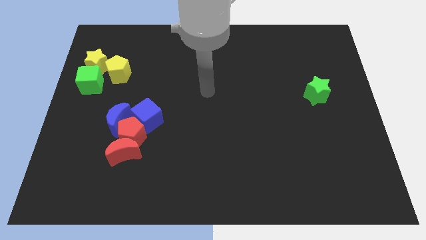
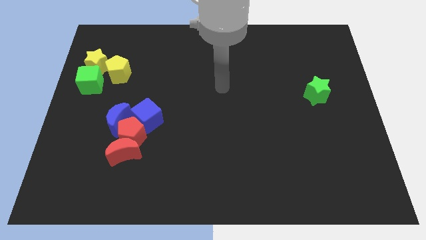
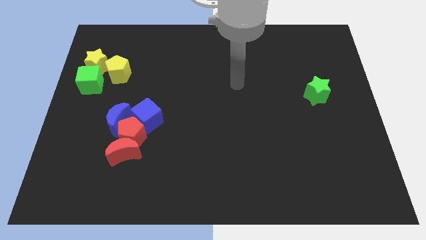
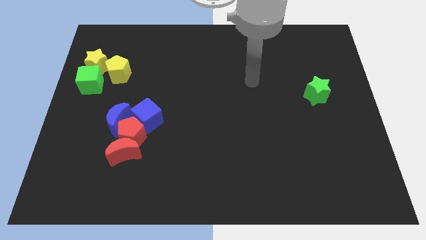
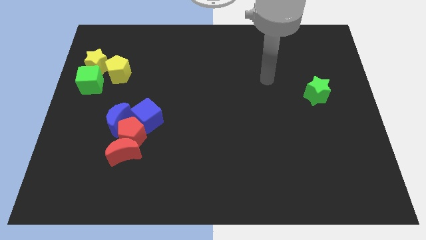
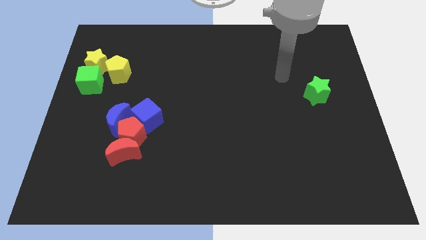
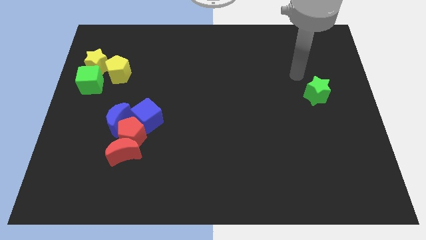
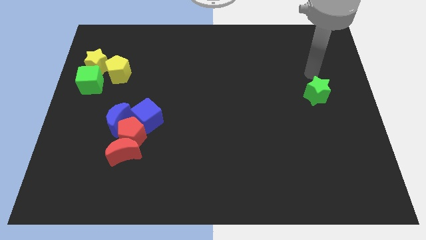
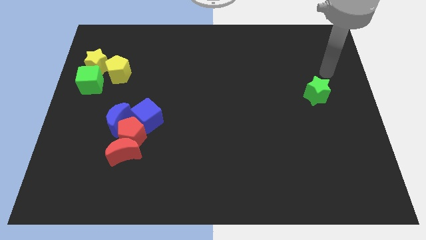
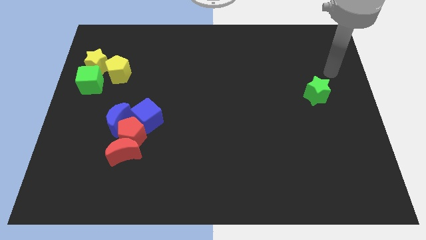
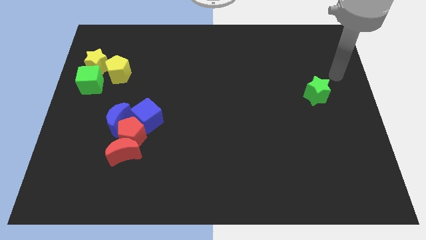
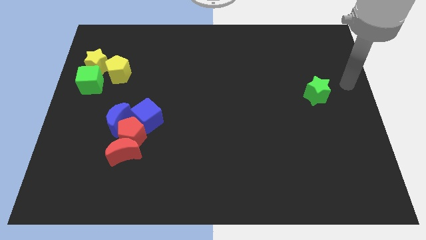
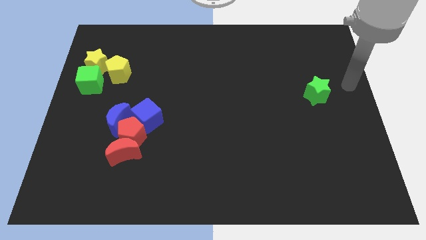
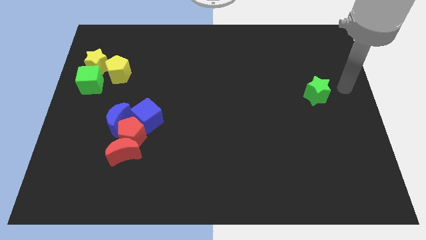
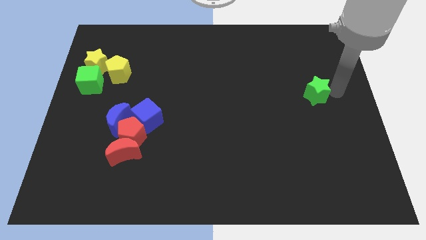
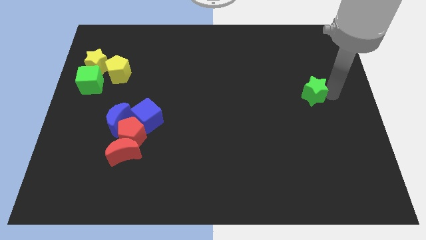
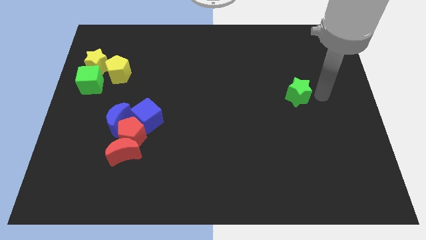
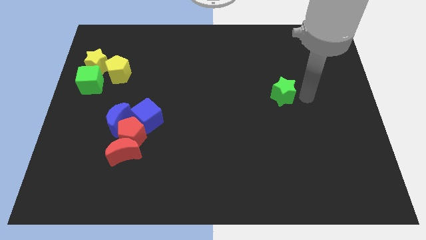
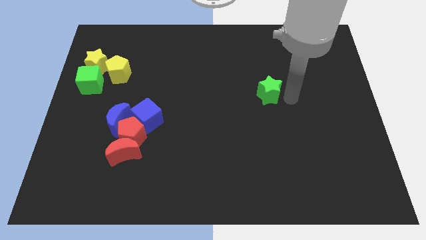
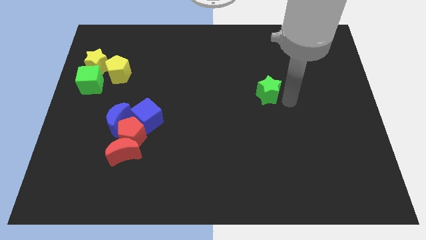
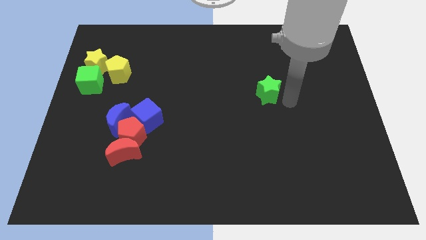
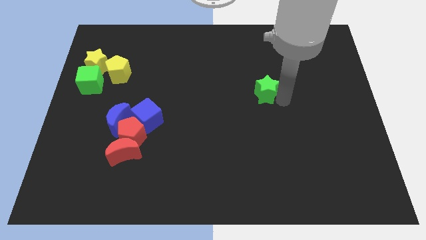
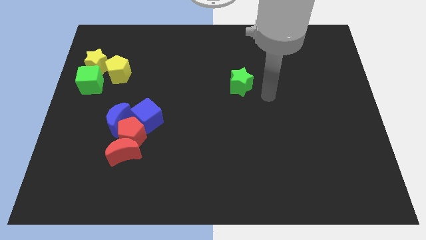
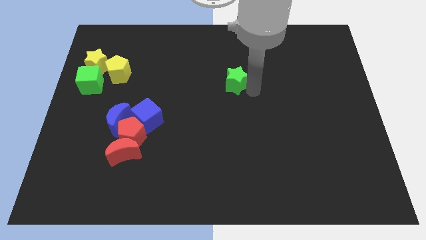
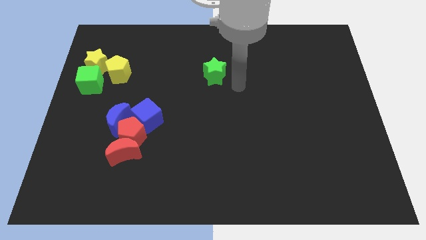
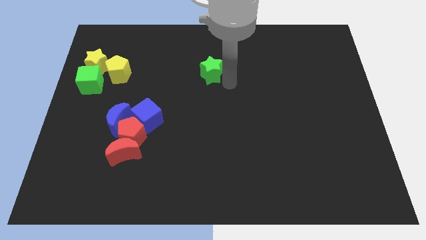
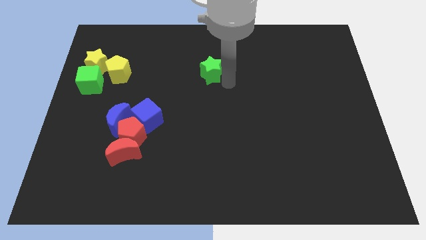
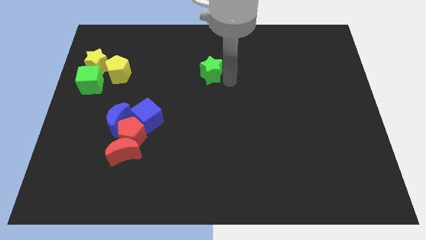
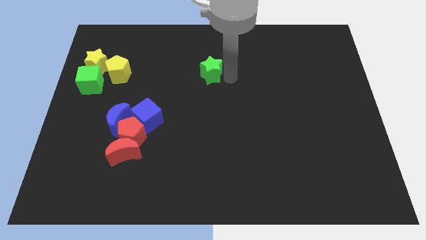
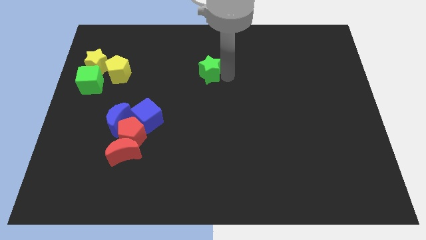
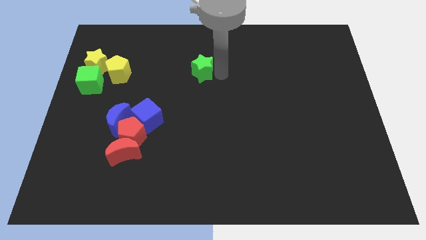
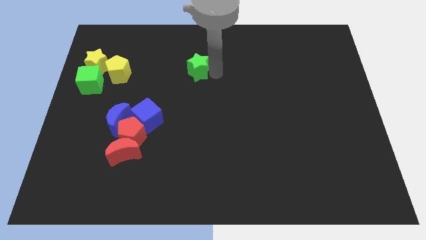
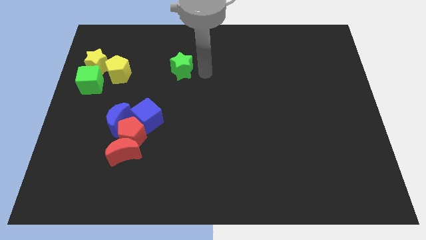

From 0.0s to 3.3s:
push the green star to the top right of the blue cube

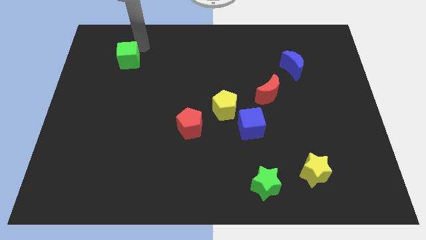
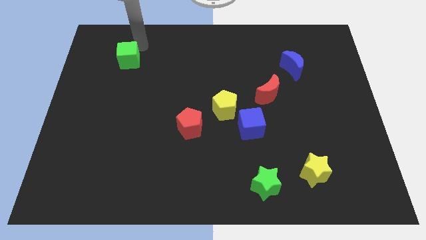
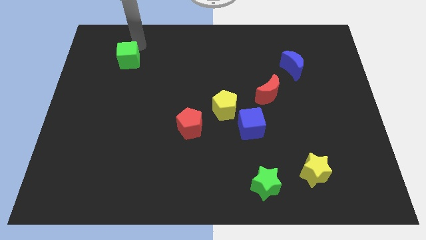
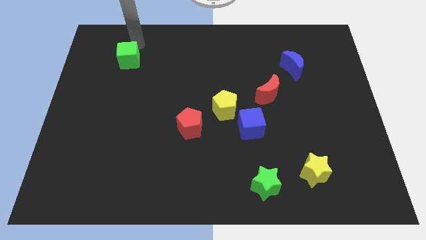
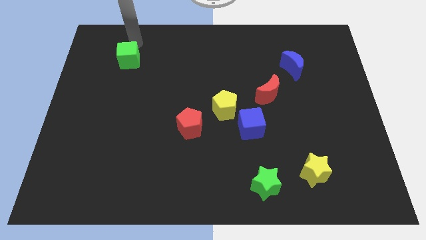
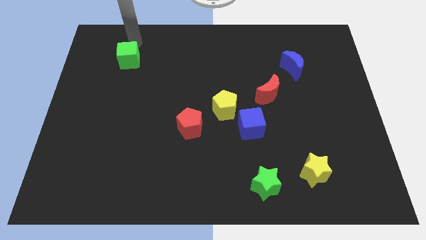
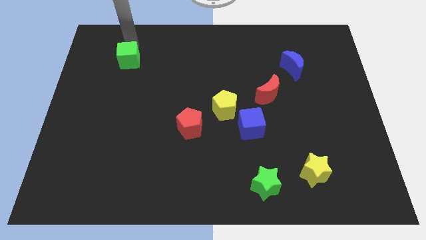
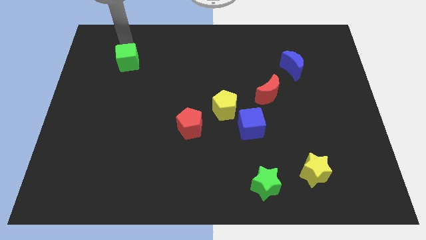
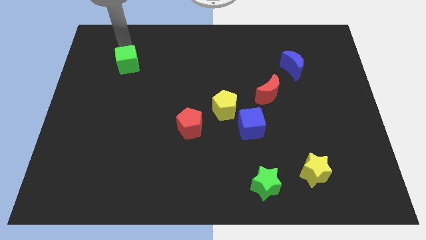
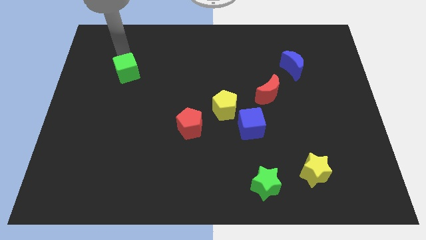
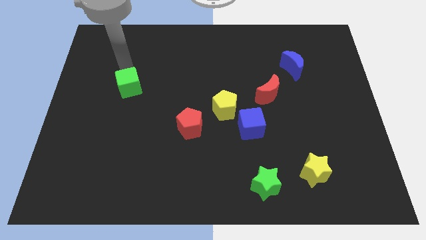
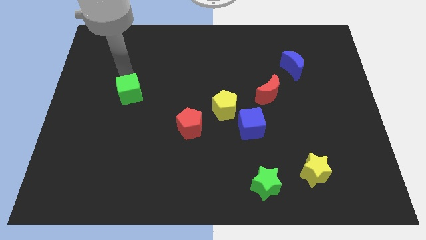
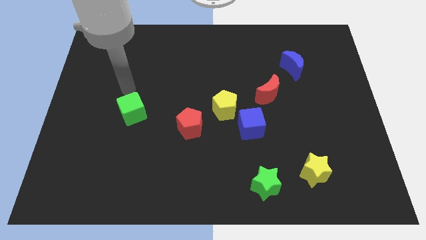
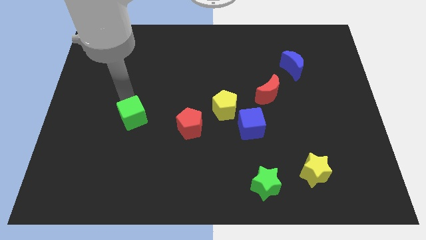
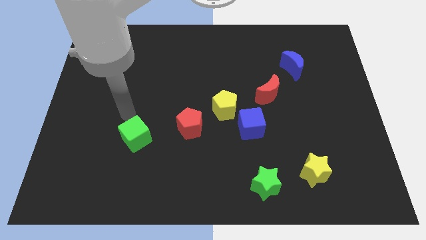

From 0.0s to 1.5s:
push the green cube downward

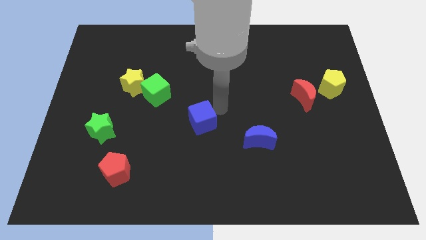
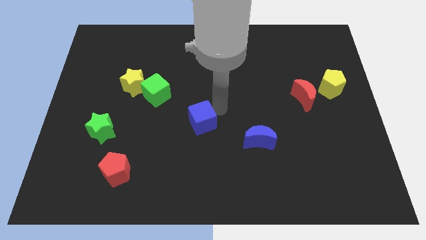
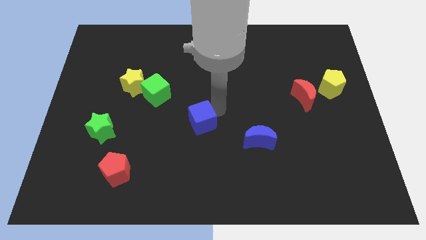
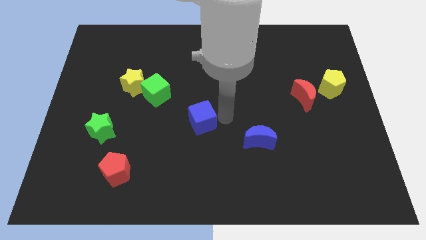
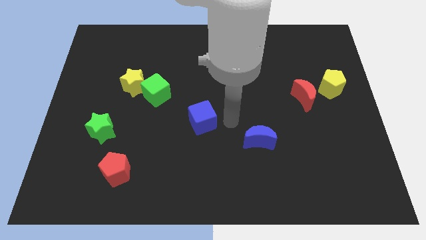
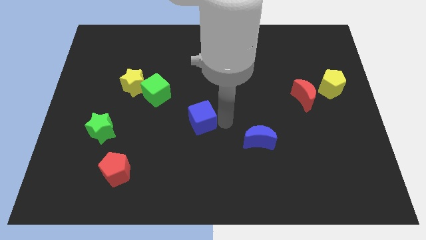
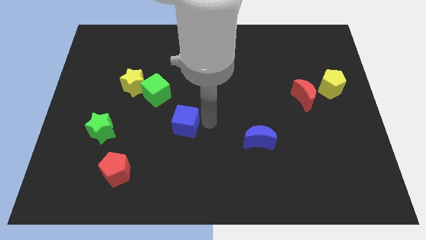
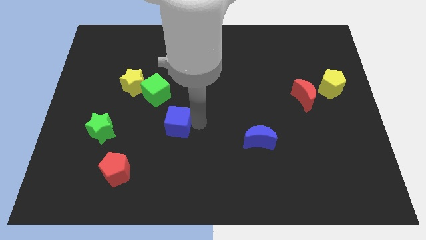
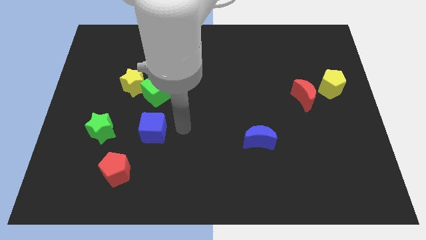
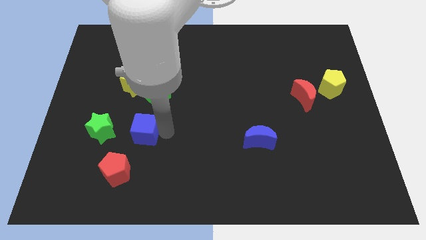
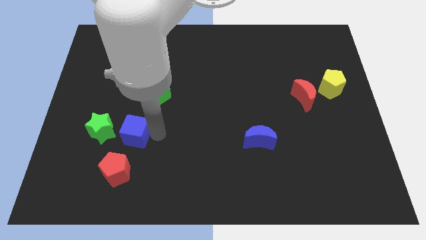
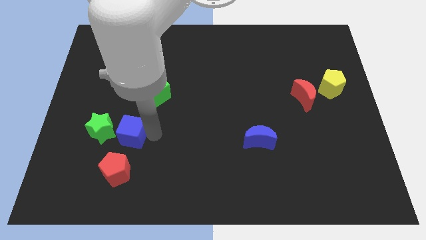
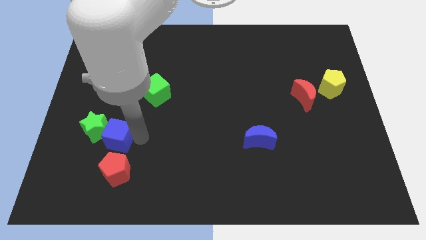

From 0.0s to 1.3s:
move the blue cube to the right of the green star

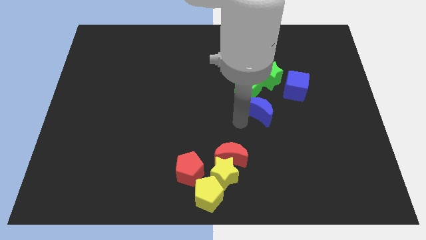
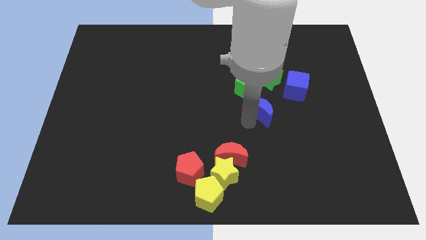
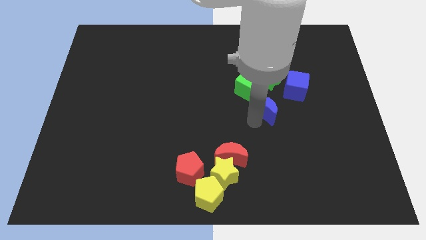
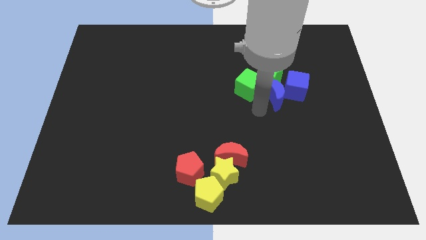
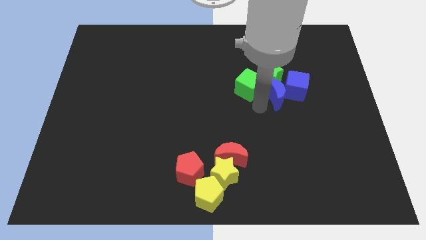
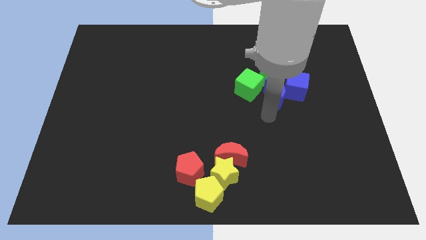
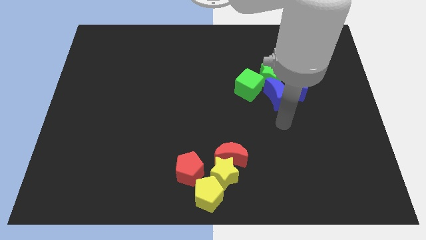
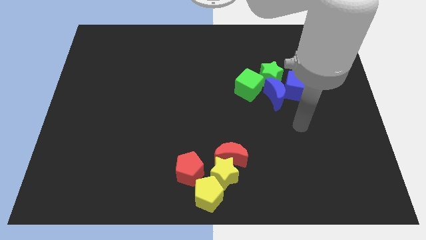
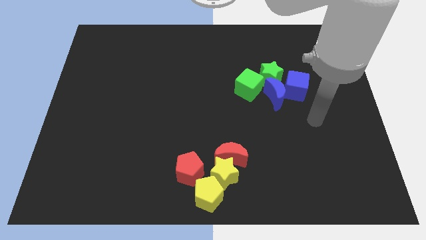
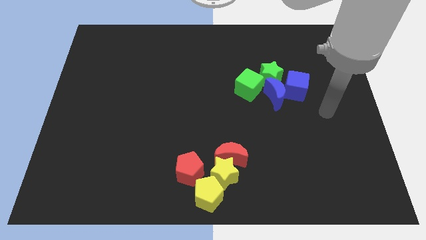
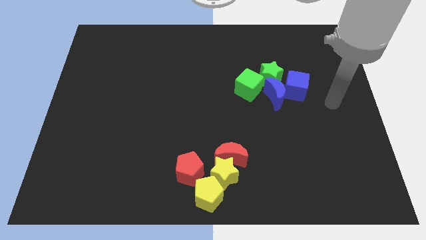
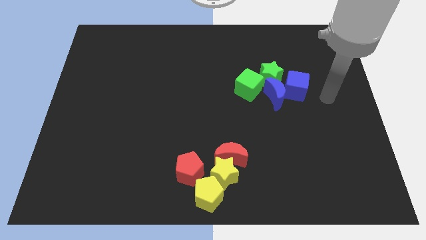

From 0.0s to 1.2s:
slide the blue crescent into the blue cube

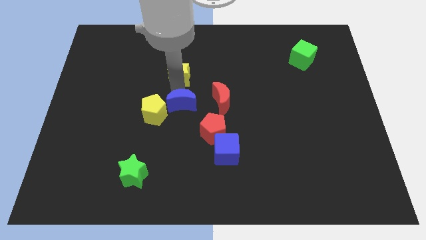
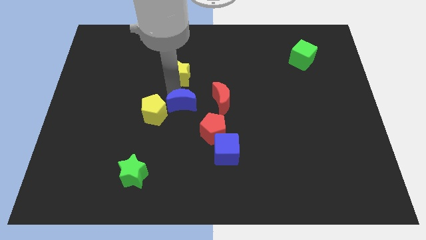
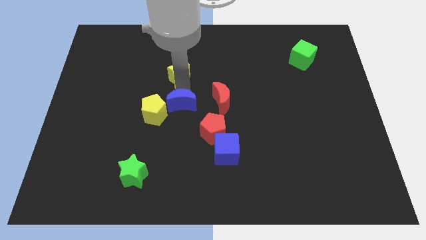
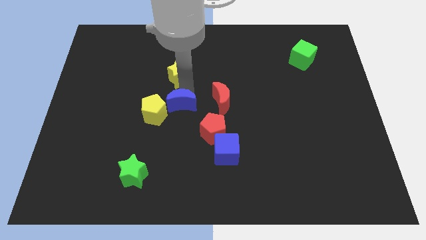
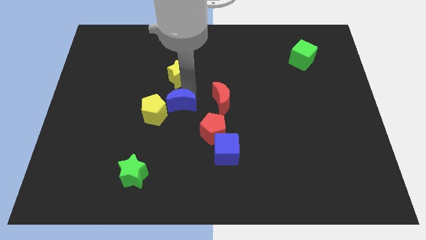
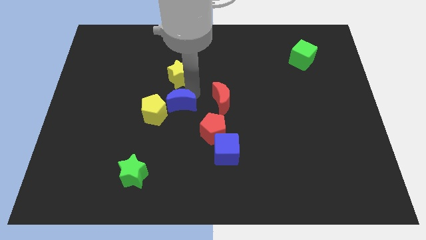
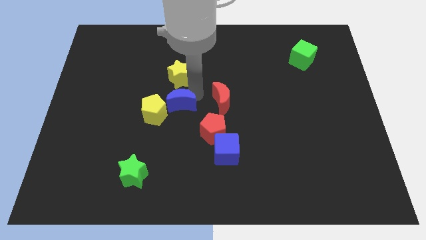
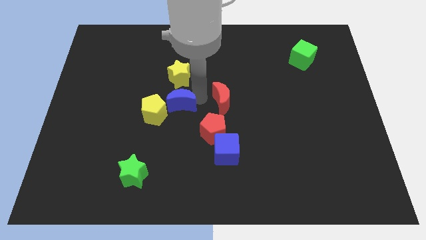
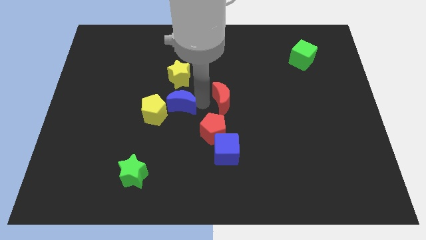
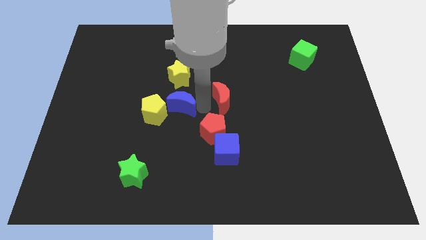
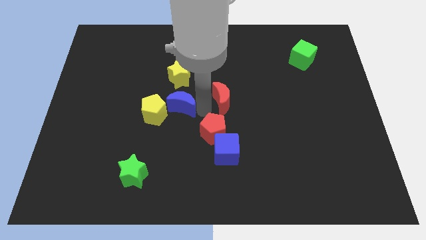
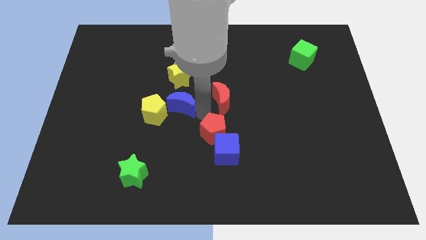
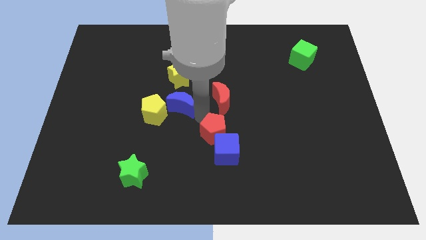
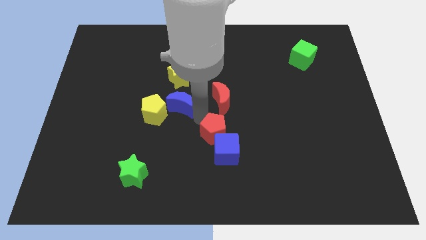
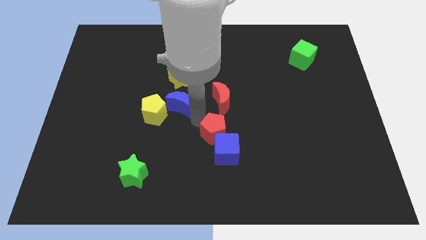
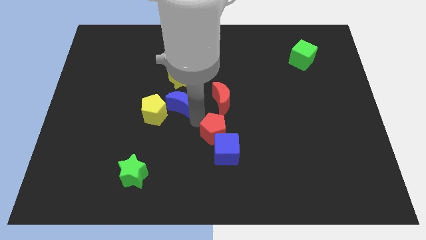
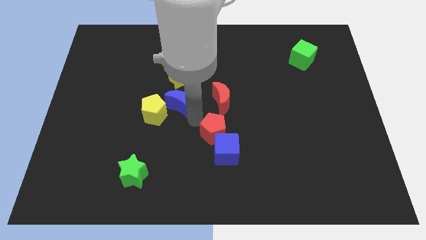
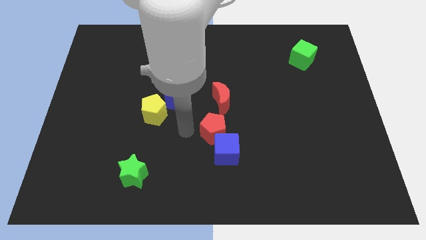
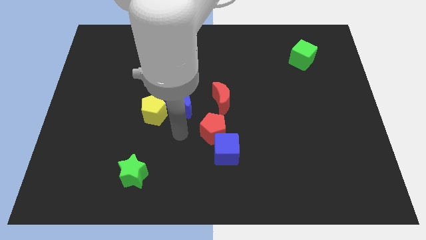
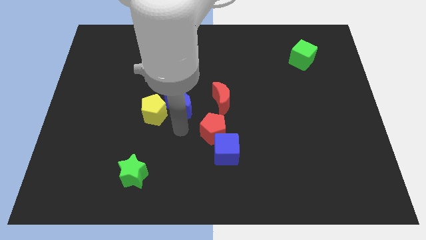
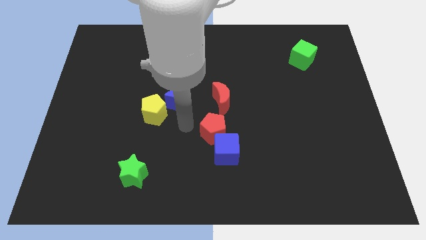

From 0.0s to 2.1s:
move blue crescent close to the yellow pentagon
